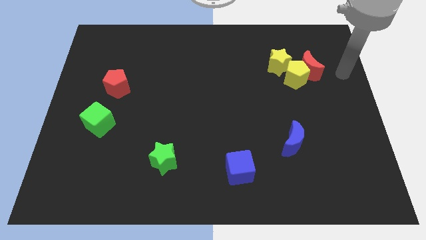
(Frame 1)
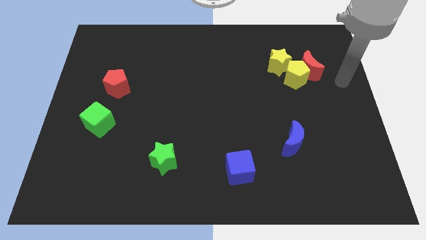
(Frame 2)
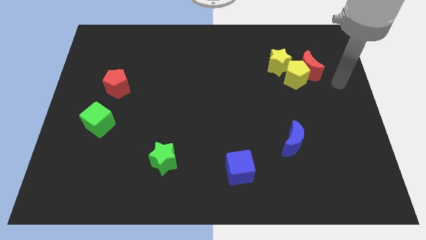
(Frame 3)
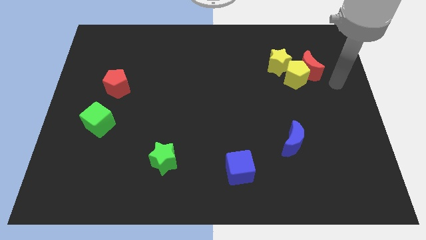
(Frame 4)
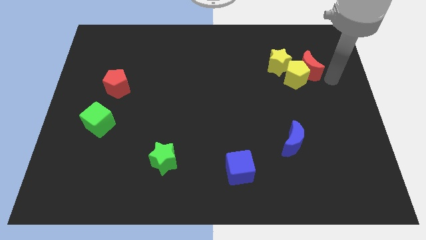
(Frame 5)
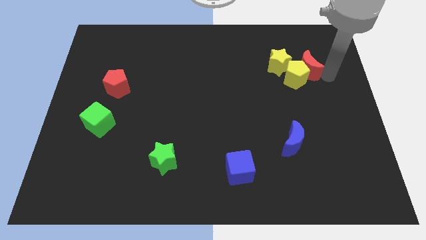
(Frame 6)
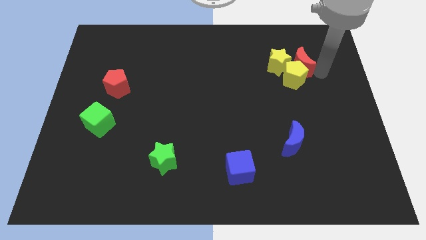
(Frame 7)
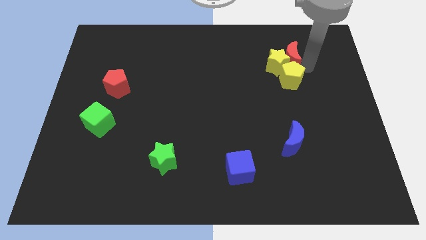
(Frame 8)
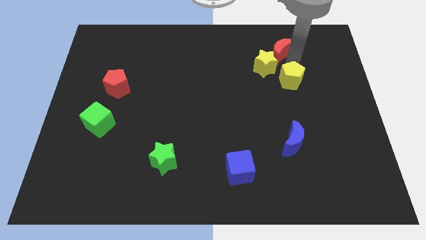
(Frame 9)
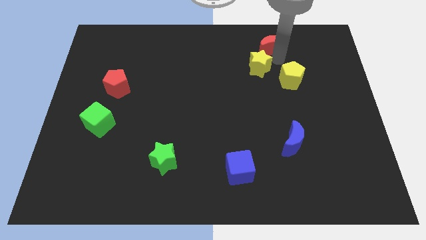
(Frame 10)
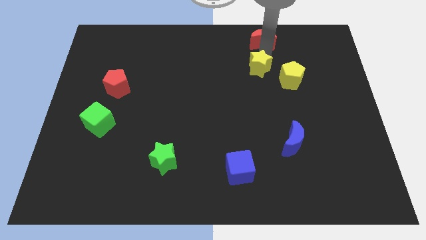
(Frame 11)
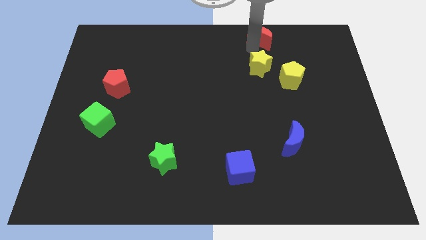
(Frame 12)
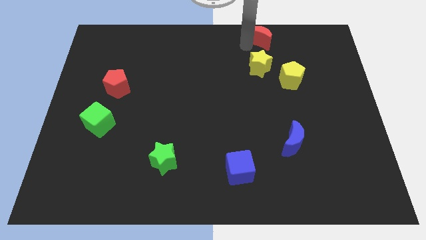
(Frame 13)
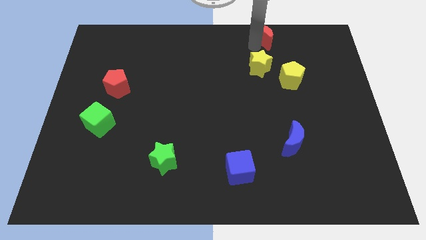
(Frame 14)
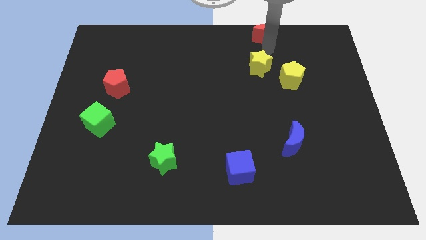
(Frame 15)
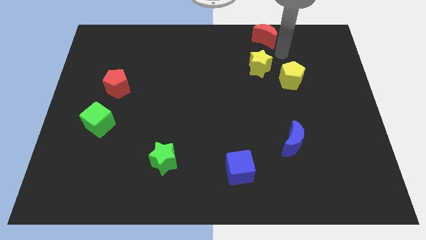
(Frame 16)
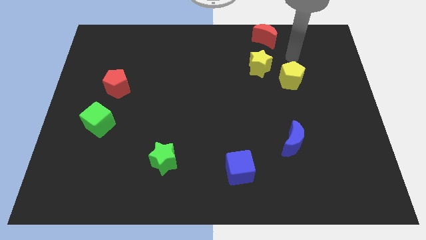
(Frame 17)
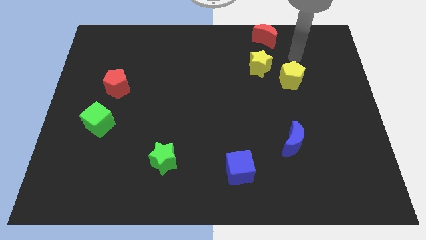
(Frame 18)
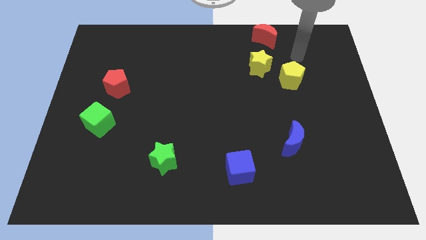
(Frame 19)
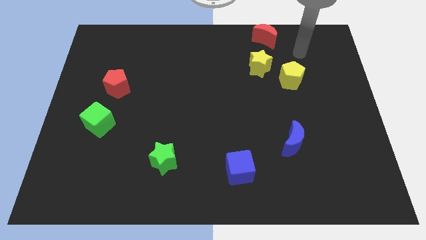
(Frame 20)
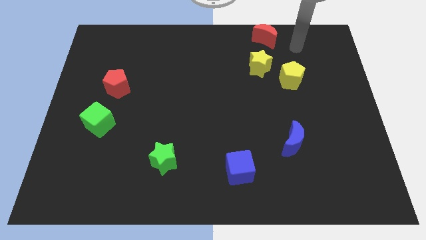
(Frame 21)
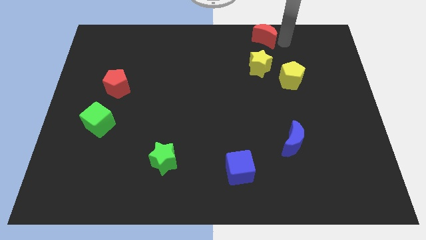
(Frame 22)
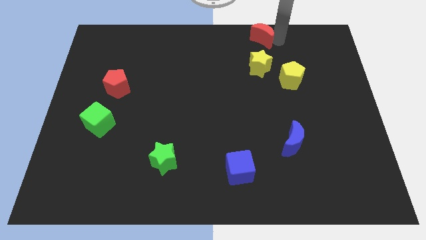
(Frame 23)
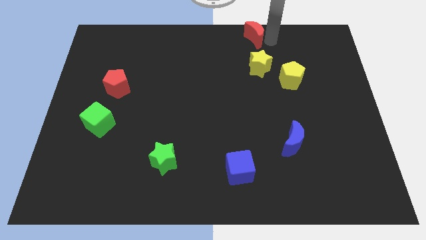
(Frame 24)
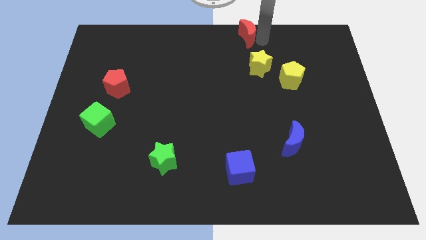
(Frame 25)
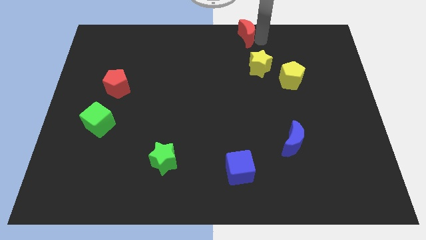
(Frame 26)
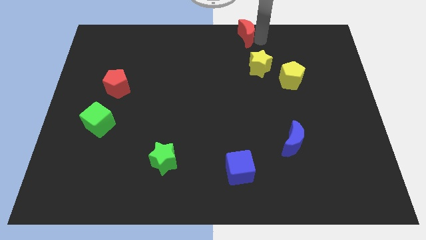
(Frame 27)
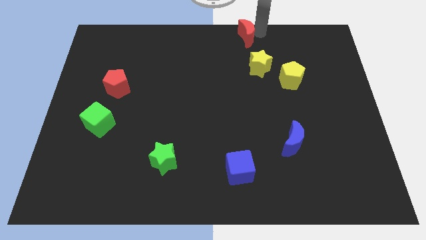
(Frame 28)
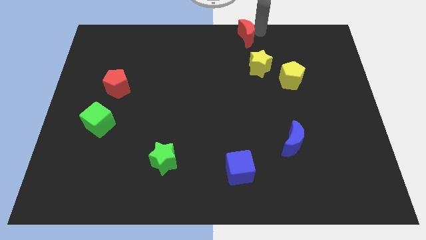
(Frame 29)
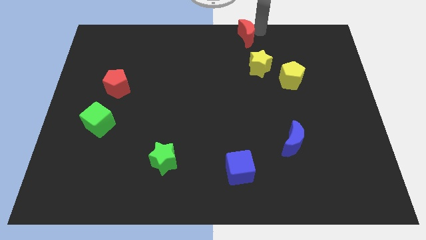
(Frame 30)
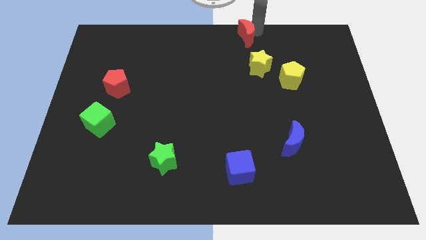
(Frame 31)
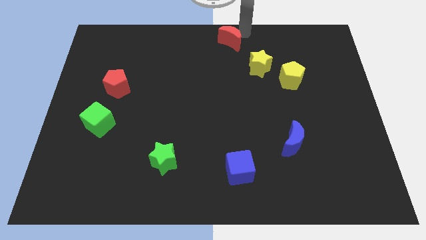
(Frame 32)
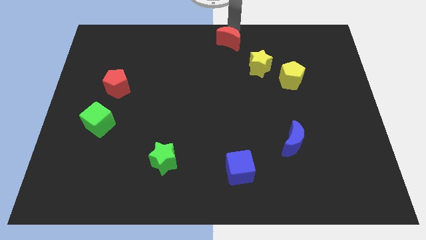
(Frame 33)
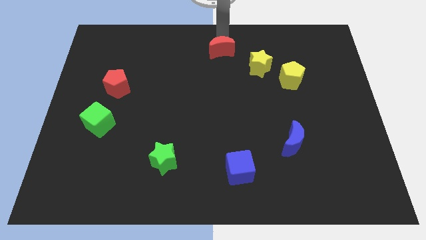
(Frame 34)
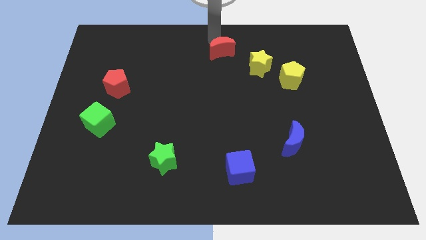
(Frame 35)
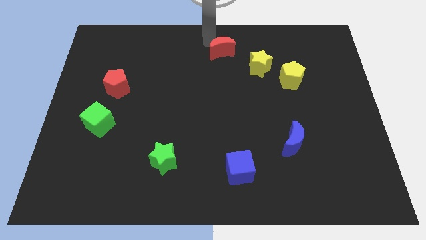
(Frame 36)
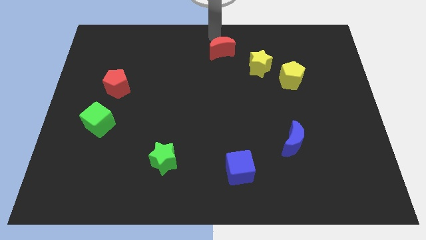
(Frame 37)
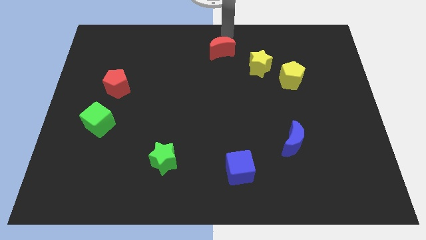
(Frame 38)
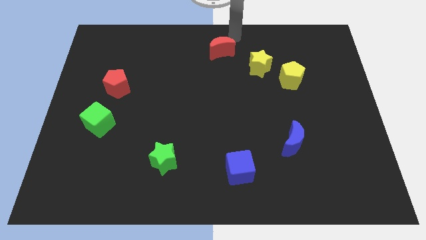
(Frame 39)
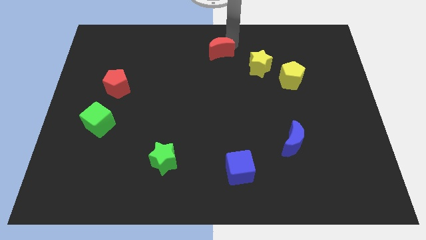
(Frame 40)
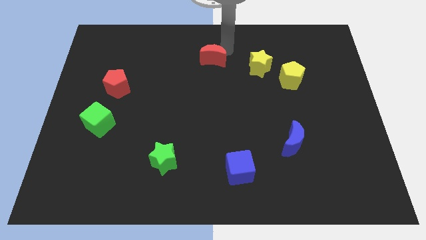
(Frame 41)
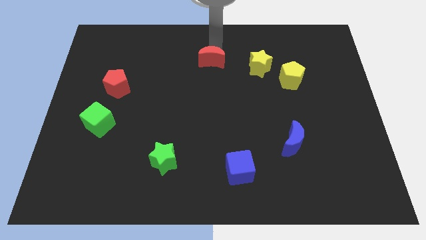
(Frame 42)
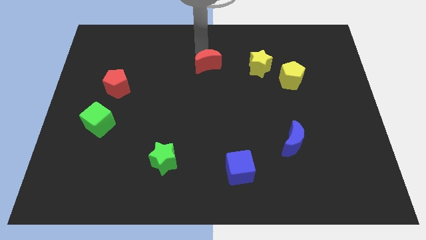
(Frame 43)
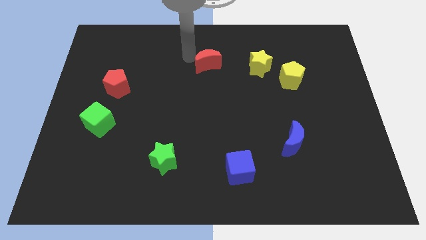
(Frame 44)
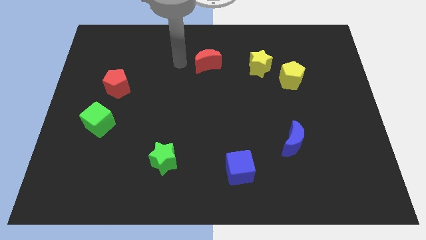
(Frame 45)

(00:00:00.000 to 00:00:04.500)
move the red crescent away from the yellow blocks

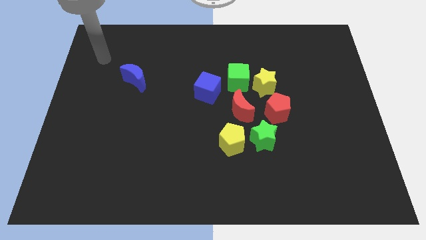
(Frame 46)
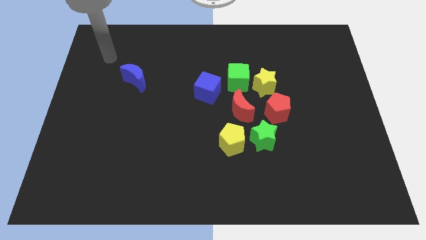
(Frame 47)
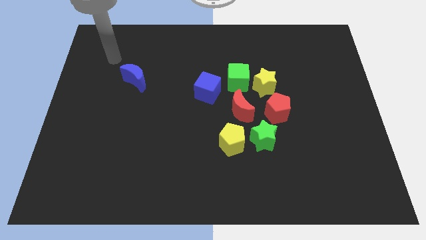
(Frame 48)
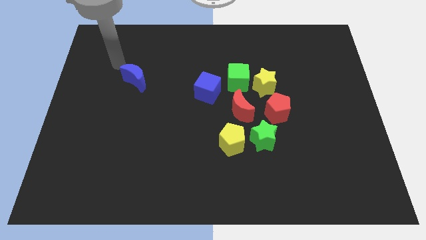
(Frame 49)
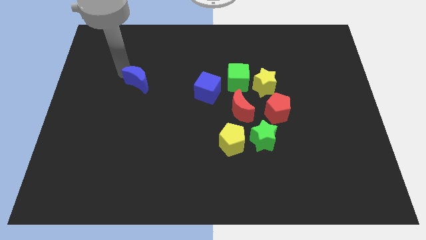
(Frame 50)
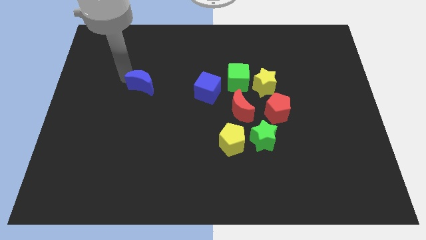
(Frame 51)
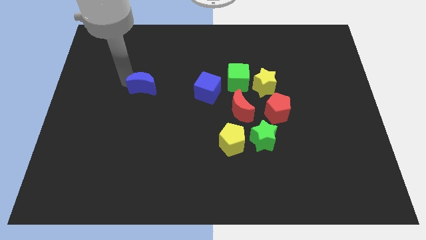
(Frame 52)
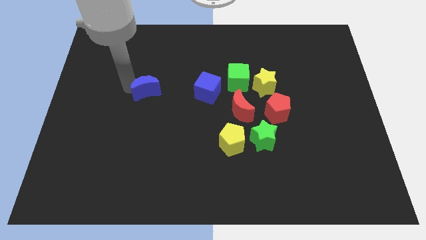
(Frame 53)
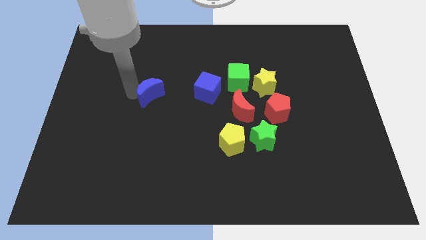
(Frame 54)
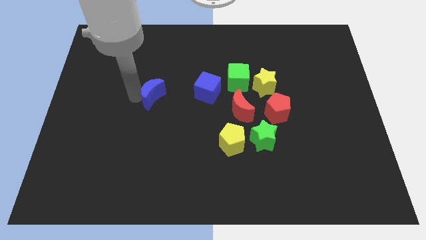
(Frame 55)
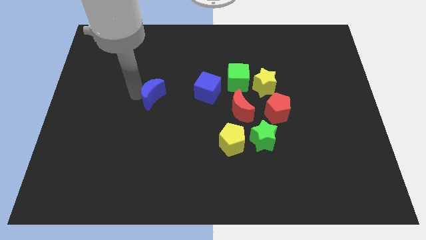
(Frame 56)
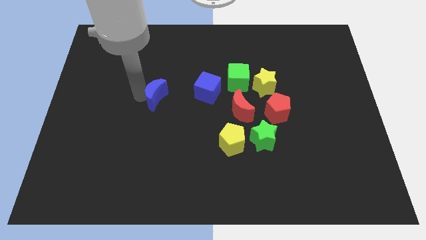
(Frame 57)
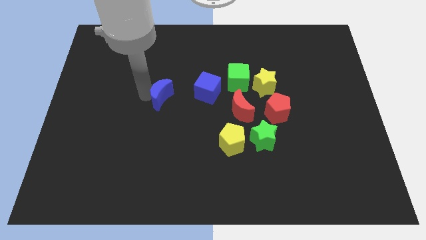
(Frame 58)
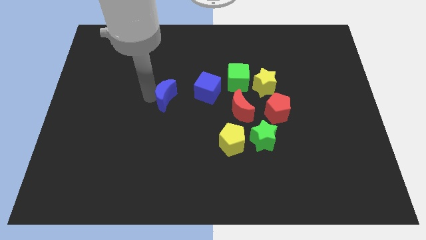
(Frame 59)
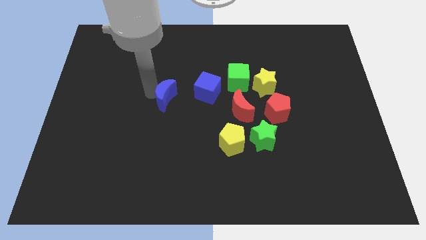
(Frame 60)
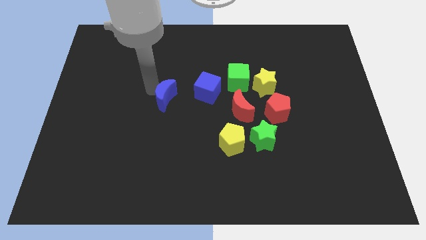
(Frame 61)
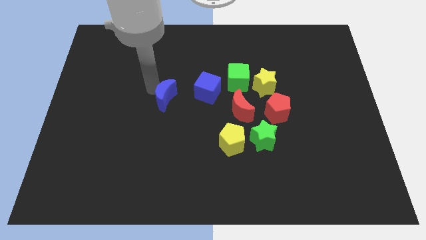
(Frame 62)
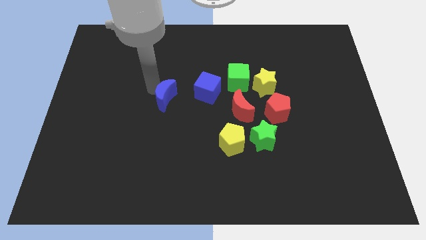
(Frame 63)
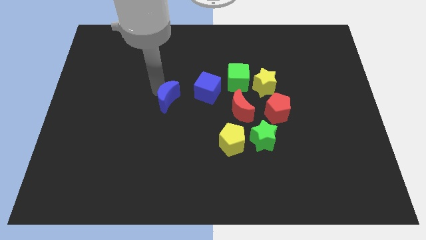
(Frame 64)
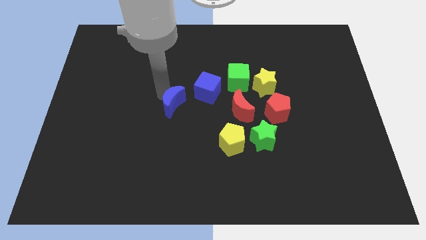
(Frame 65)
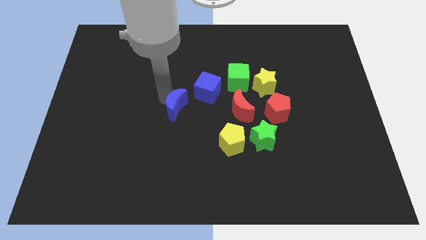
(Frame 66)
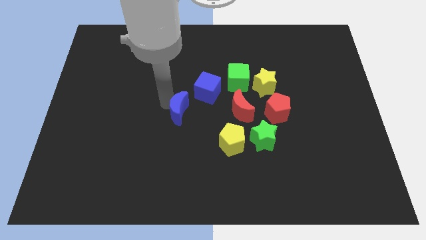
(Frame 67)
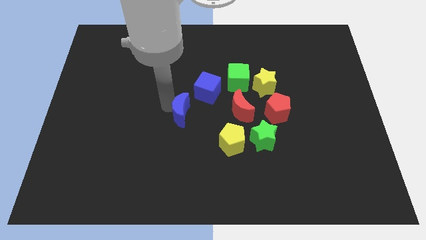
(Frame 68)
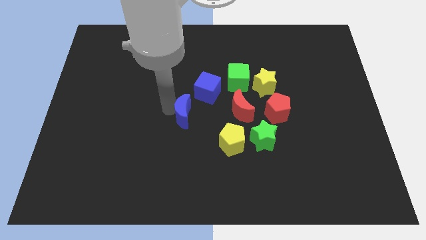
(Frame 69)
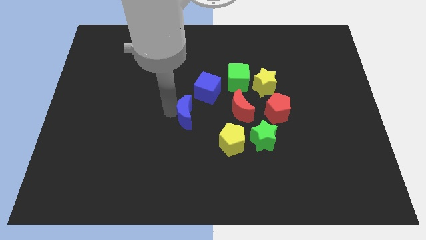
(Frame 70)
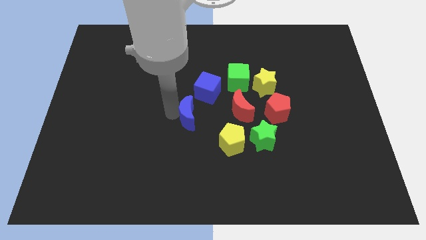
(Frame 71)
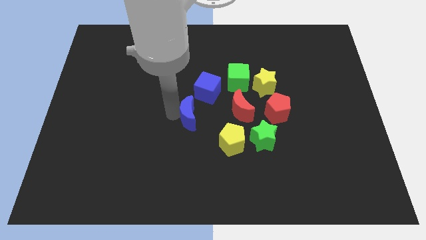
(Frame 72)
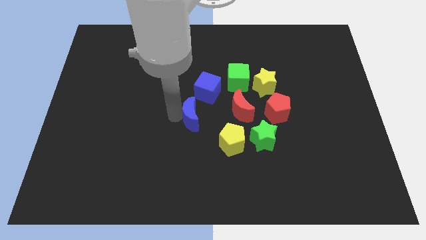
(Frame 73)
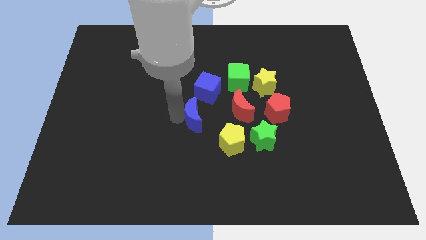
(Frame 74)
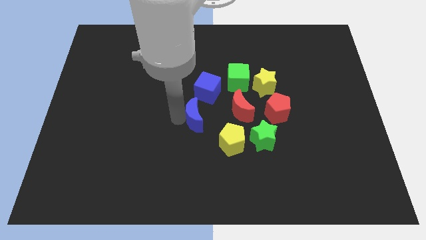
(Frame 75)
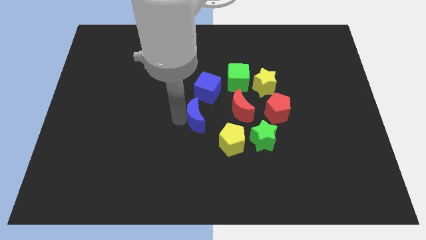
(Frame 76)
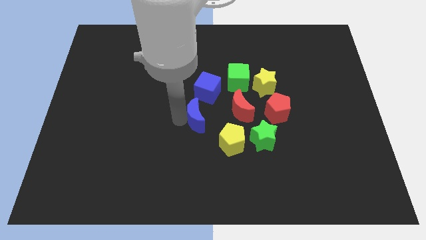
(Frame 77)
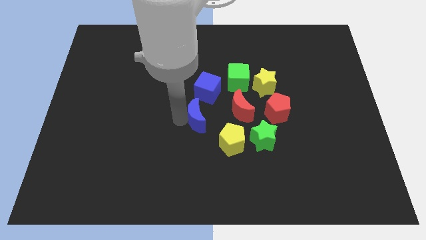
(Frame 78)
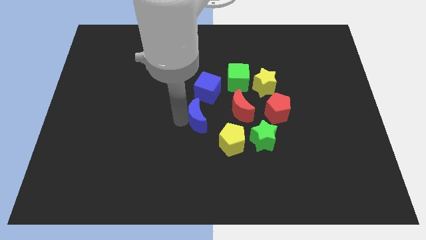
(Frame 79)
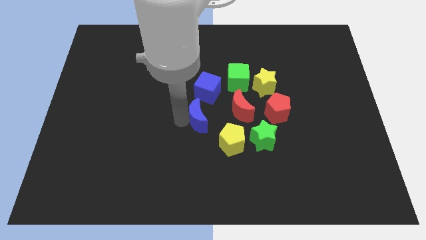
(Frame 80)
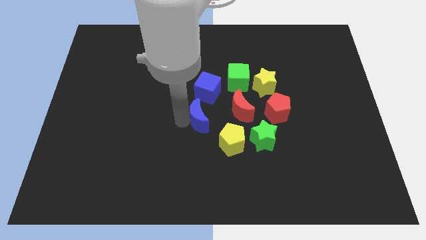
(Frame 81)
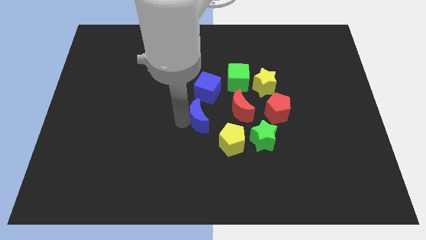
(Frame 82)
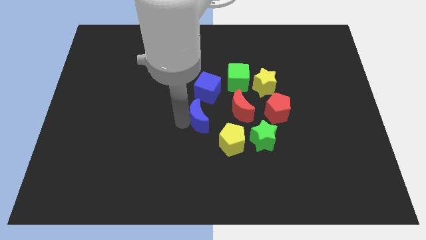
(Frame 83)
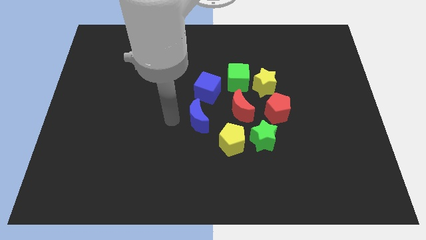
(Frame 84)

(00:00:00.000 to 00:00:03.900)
place the blue crescent below the blue cube

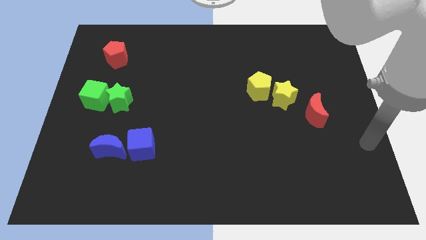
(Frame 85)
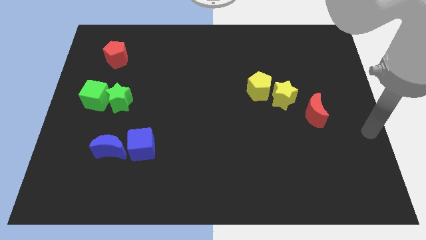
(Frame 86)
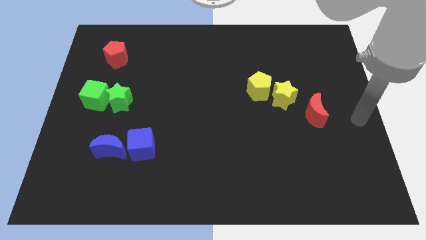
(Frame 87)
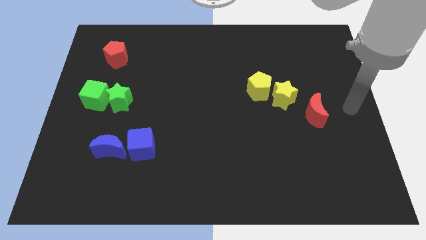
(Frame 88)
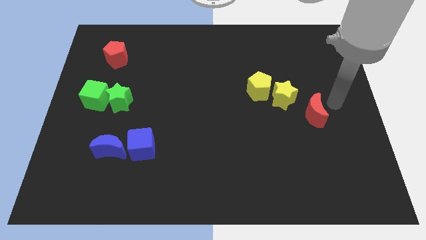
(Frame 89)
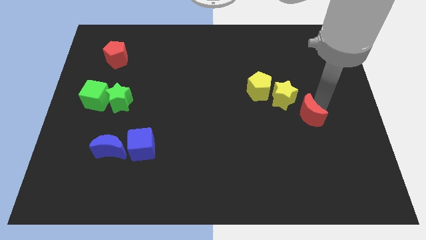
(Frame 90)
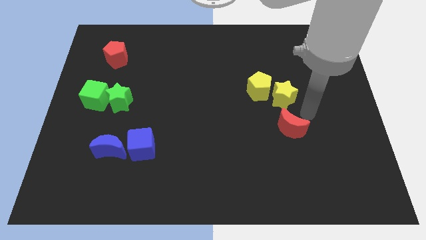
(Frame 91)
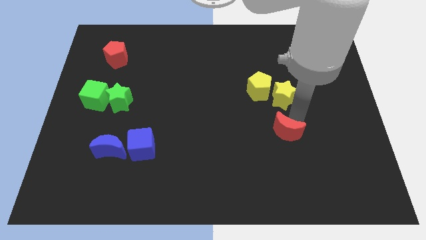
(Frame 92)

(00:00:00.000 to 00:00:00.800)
place the red moon down to the yellow star
